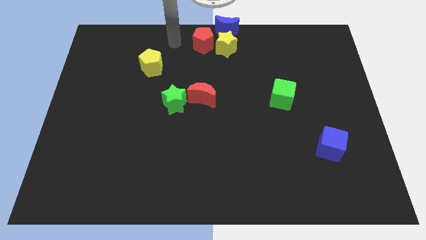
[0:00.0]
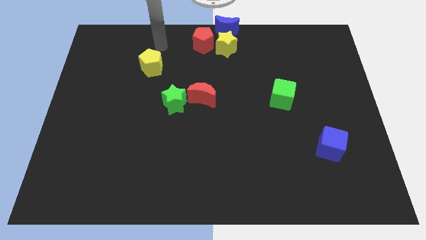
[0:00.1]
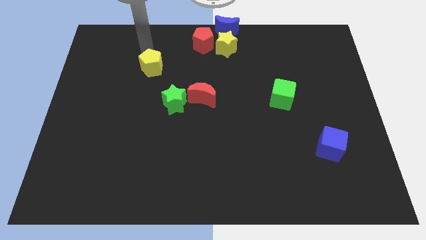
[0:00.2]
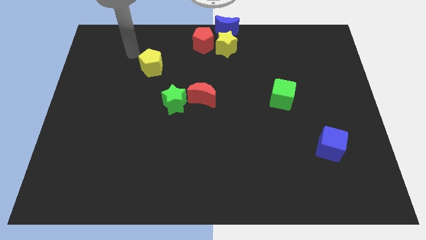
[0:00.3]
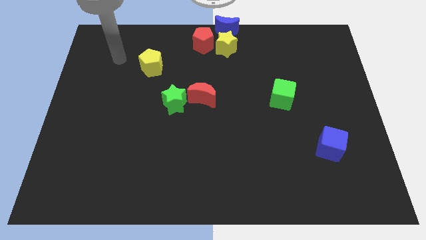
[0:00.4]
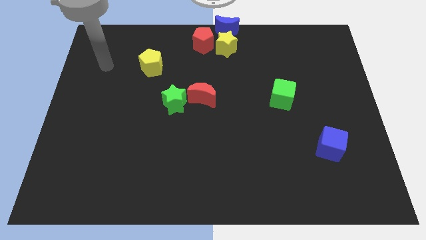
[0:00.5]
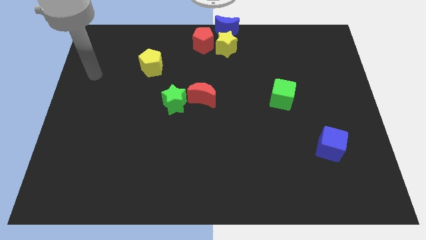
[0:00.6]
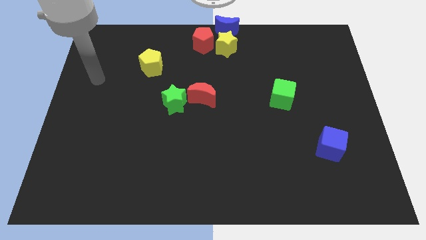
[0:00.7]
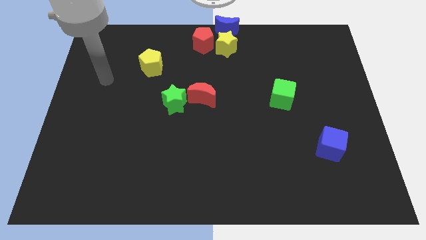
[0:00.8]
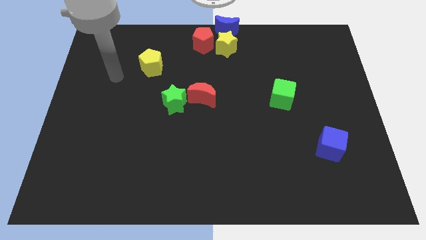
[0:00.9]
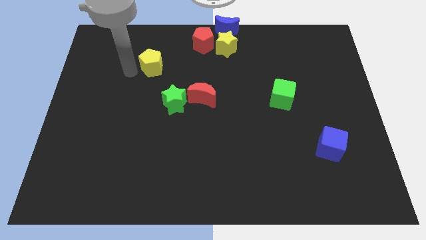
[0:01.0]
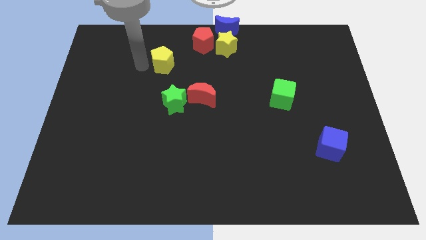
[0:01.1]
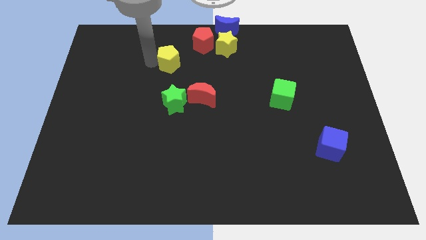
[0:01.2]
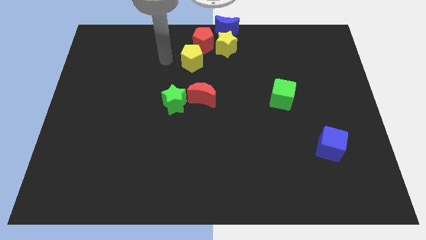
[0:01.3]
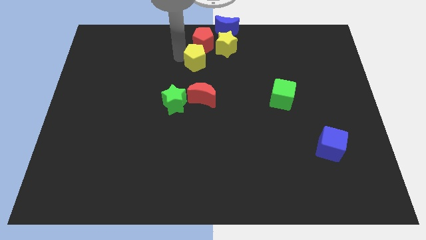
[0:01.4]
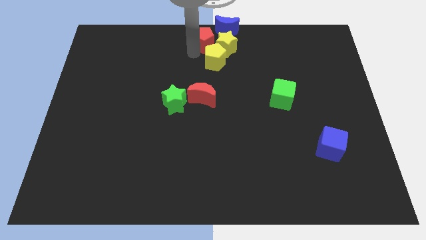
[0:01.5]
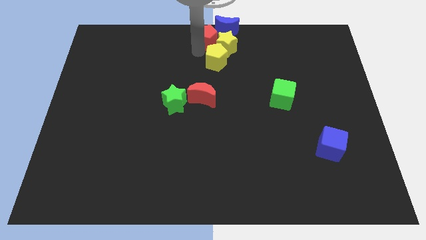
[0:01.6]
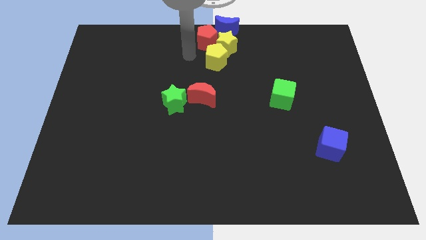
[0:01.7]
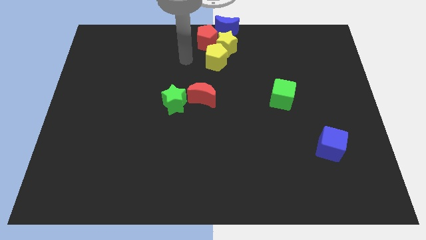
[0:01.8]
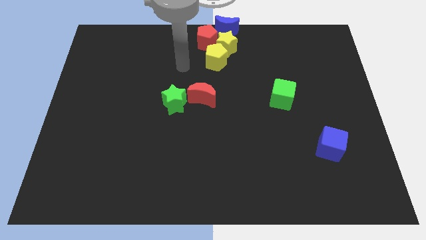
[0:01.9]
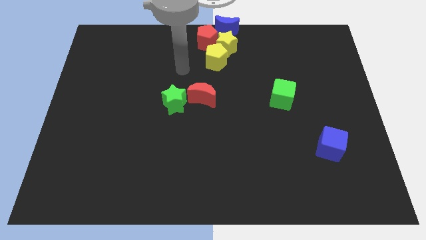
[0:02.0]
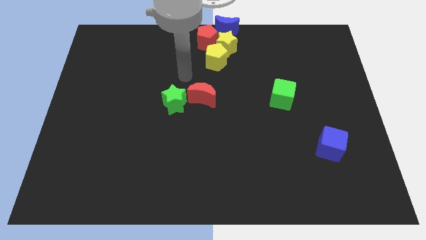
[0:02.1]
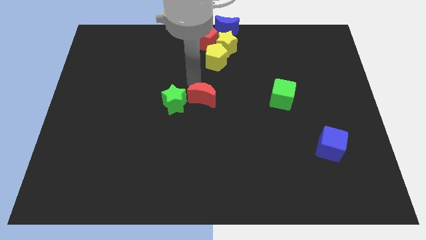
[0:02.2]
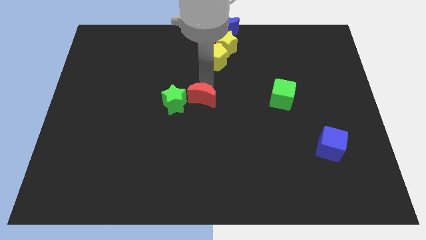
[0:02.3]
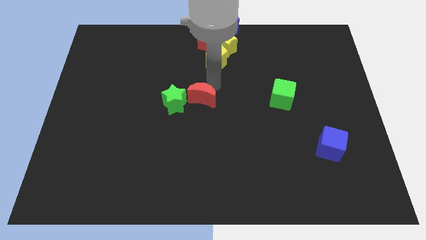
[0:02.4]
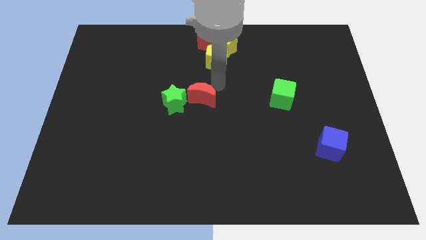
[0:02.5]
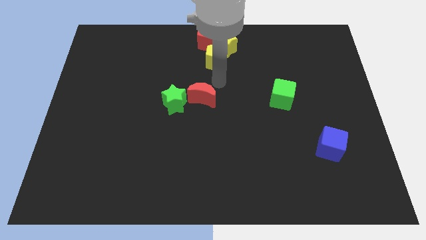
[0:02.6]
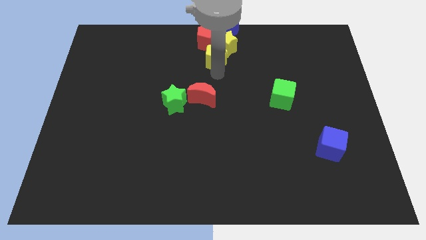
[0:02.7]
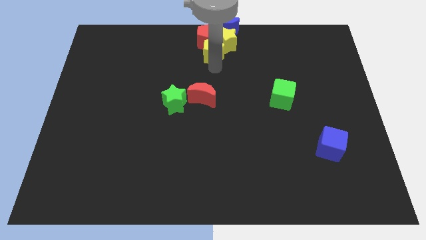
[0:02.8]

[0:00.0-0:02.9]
place the yellow pentagon below the yellow star

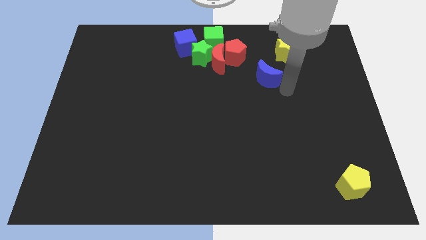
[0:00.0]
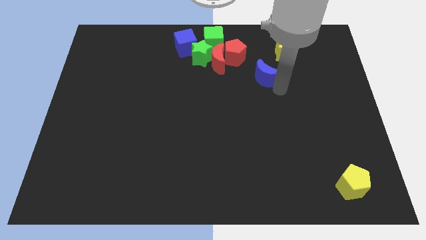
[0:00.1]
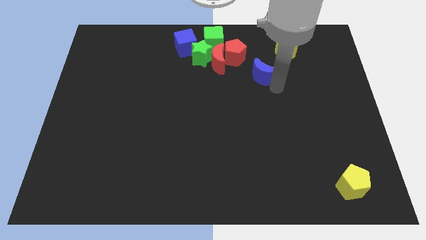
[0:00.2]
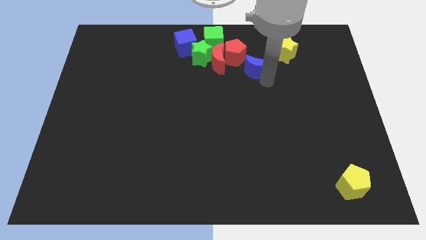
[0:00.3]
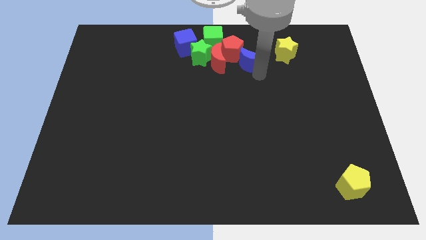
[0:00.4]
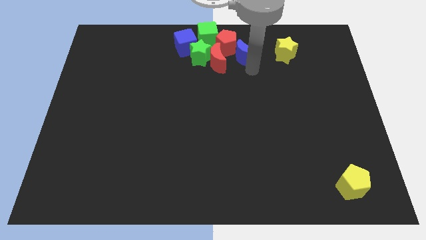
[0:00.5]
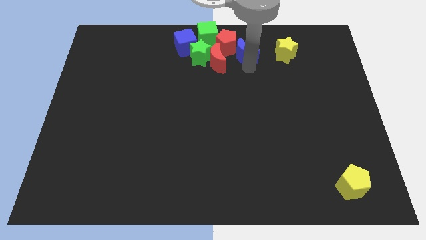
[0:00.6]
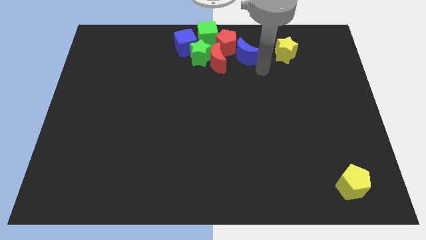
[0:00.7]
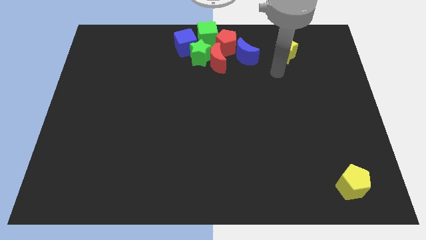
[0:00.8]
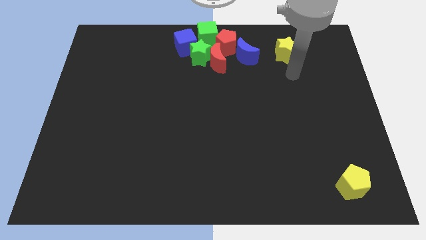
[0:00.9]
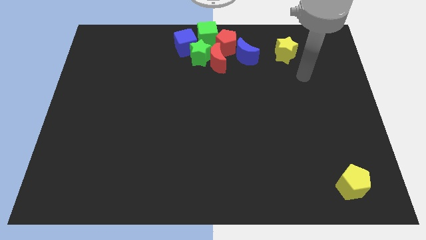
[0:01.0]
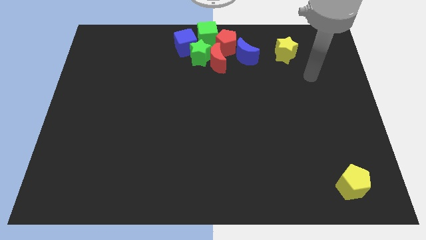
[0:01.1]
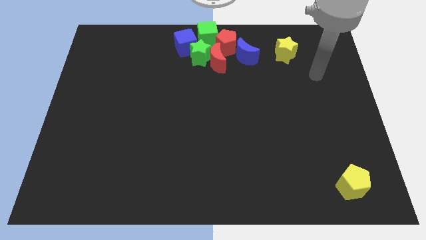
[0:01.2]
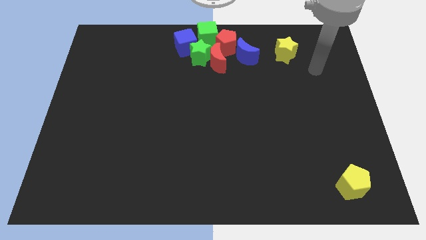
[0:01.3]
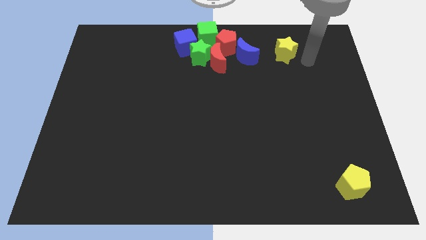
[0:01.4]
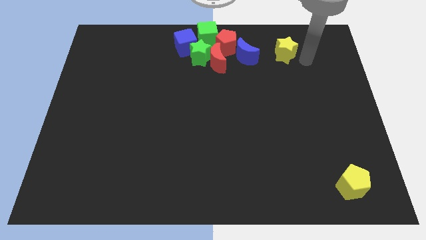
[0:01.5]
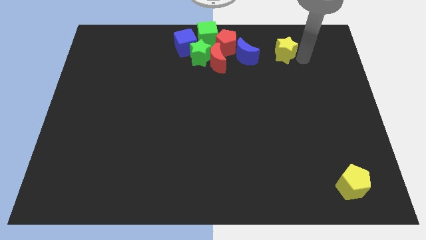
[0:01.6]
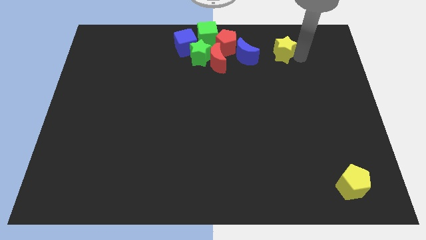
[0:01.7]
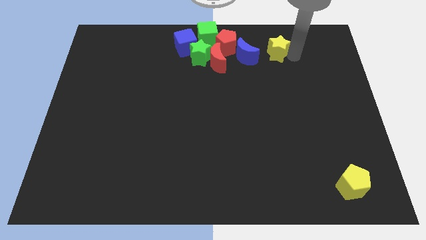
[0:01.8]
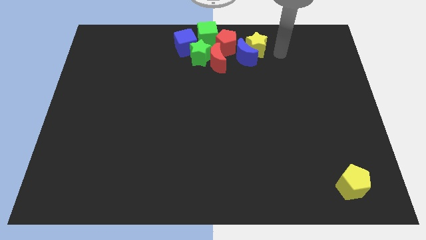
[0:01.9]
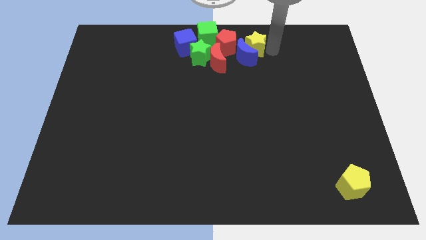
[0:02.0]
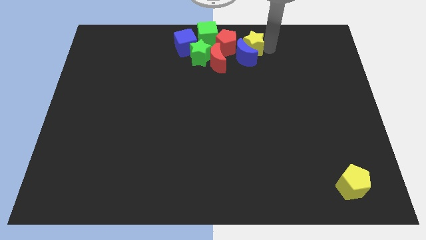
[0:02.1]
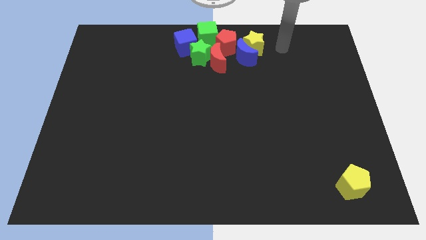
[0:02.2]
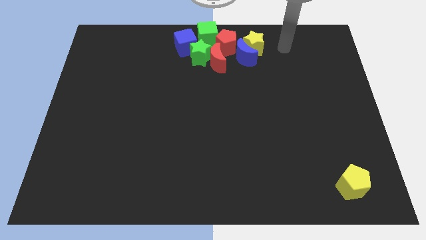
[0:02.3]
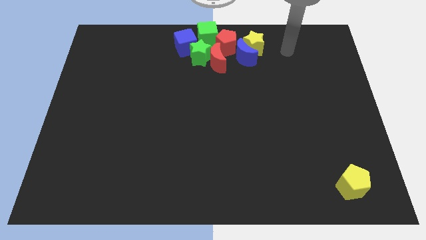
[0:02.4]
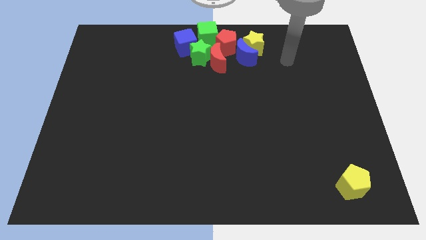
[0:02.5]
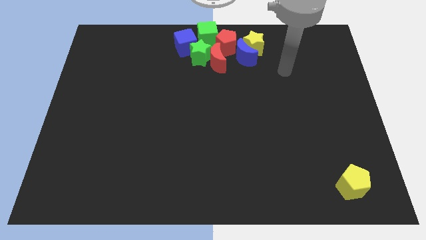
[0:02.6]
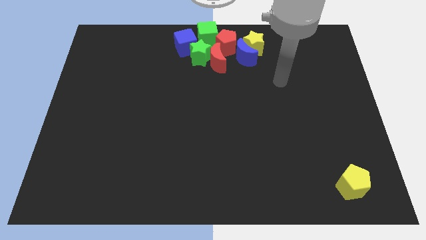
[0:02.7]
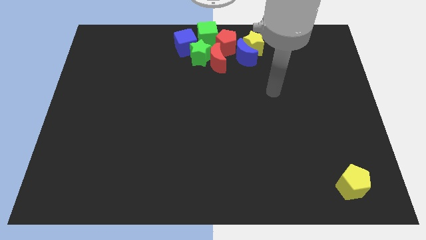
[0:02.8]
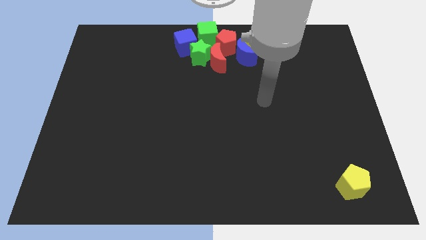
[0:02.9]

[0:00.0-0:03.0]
move the yellow star into the blue crescent

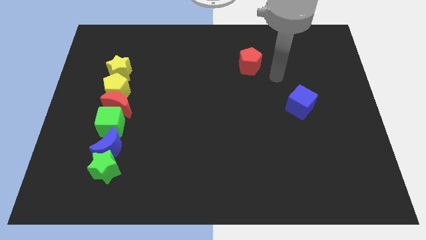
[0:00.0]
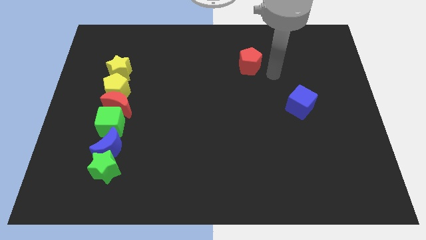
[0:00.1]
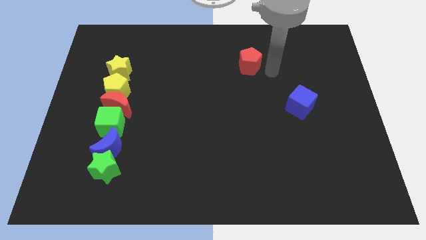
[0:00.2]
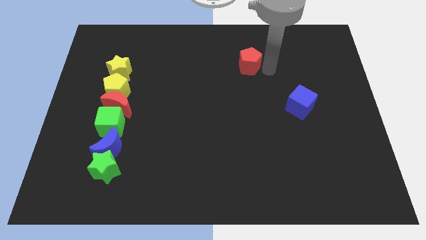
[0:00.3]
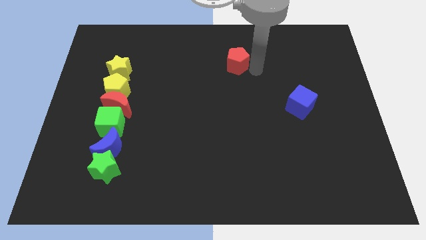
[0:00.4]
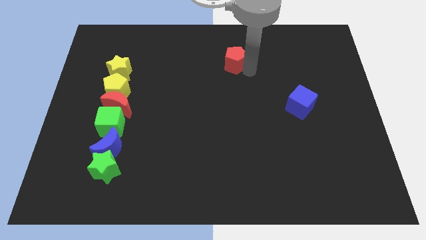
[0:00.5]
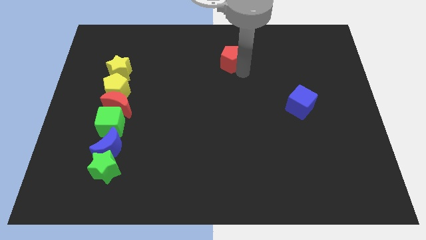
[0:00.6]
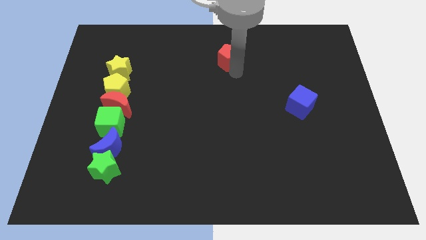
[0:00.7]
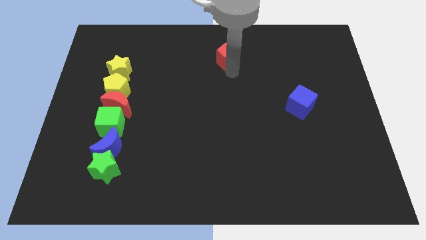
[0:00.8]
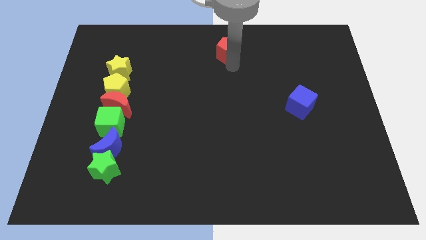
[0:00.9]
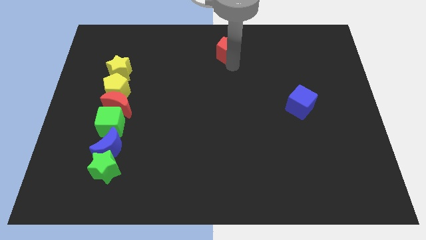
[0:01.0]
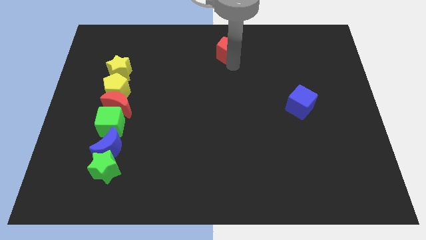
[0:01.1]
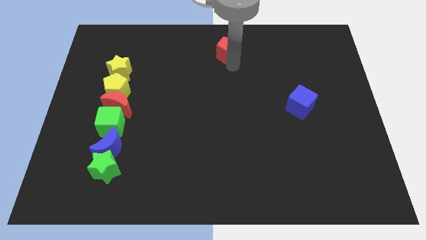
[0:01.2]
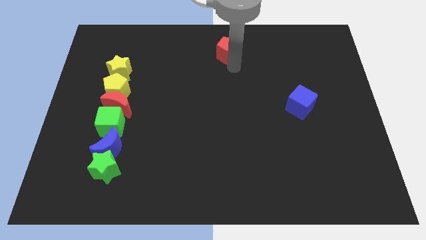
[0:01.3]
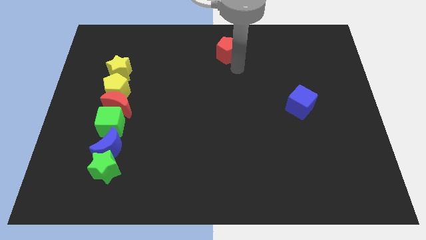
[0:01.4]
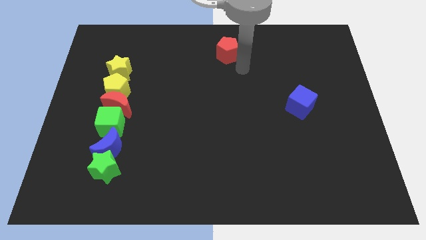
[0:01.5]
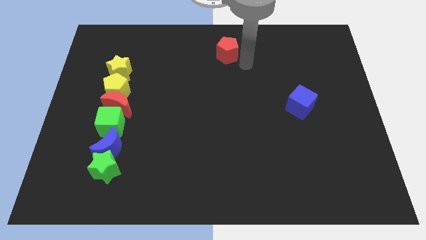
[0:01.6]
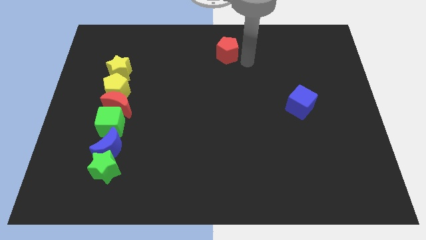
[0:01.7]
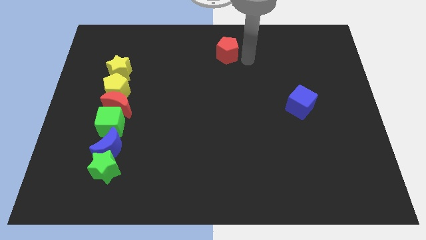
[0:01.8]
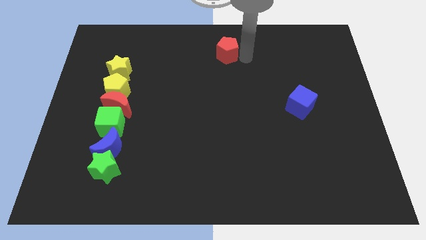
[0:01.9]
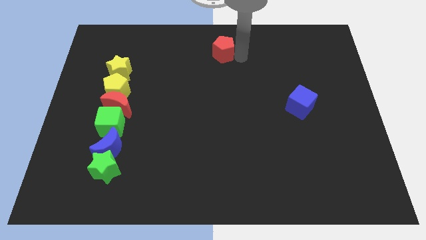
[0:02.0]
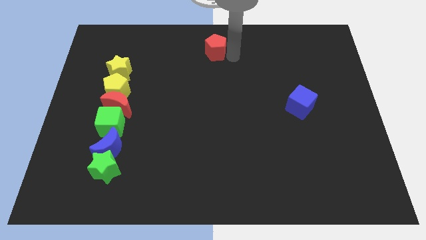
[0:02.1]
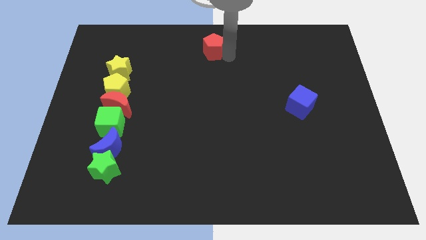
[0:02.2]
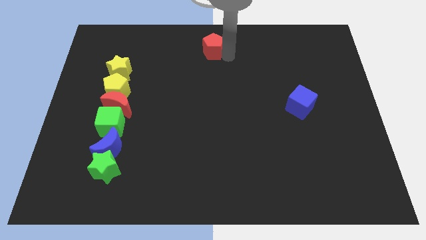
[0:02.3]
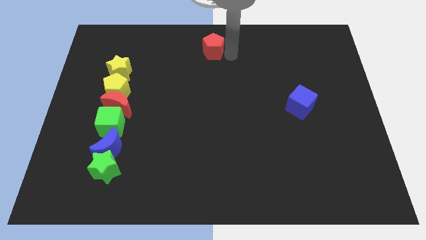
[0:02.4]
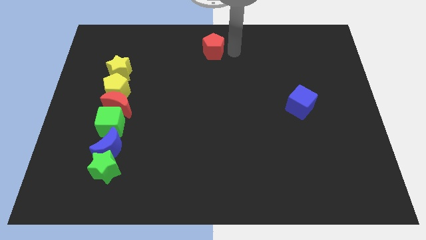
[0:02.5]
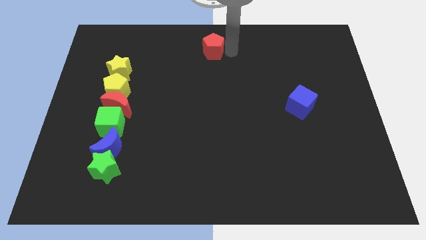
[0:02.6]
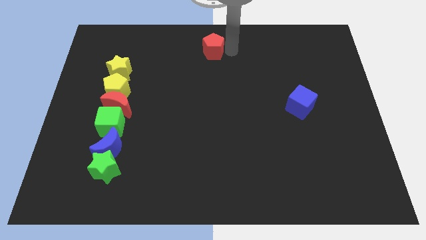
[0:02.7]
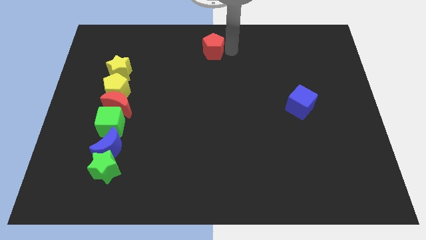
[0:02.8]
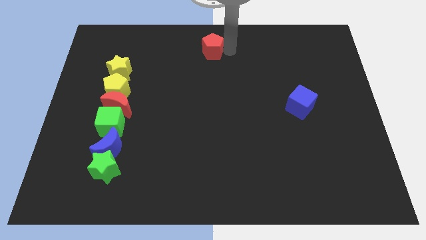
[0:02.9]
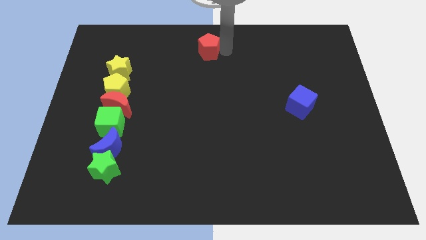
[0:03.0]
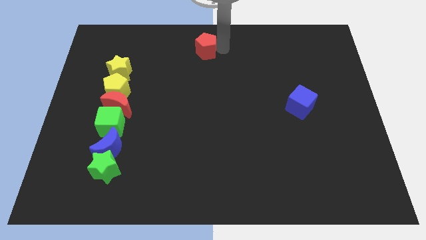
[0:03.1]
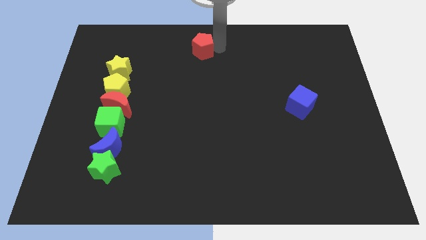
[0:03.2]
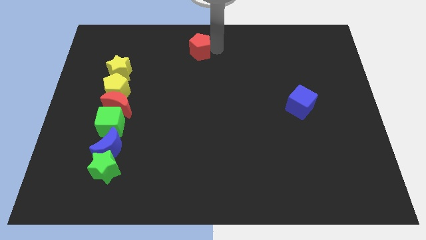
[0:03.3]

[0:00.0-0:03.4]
move red pentagon slightly to the left
